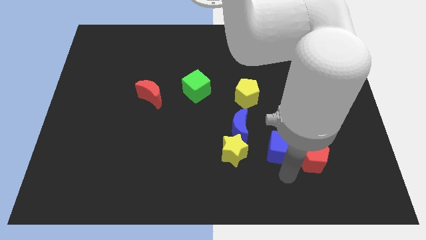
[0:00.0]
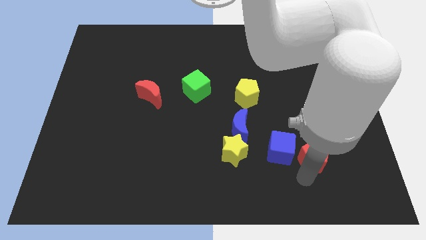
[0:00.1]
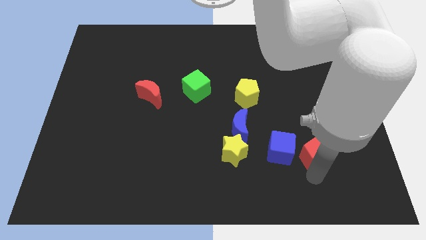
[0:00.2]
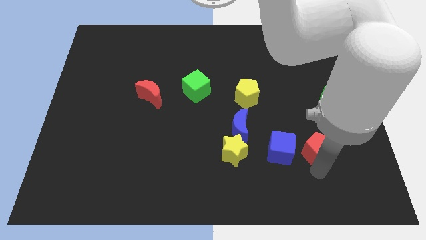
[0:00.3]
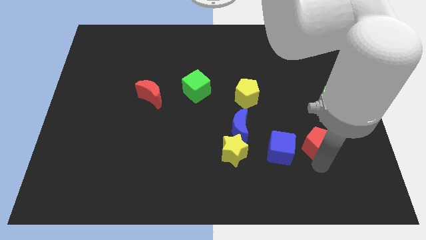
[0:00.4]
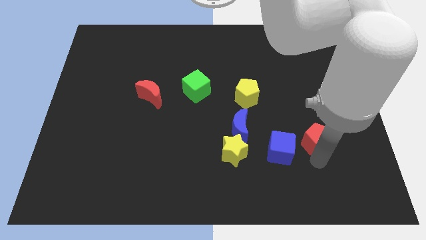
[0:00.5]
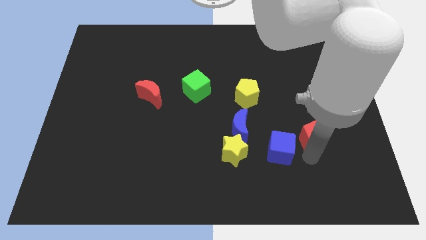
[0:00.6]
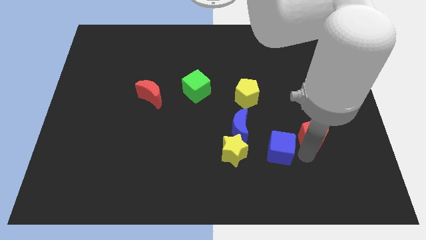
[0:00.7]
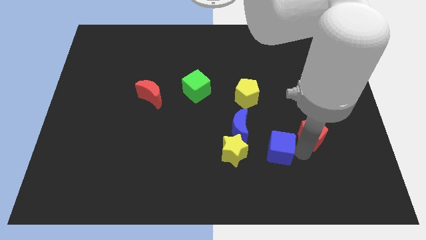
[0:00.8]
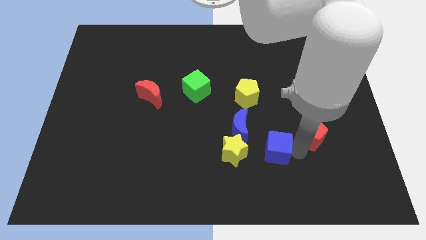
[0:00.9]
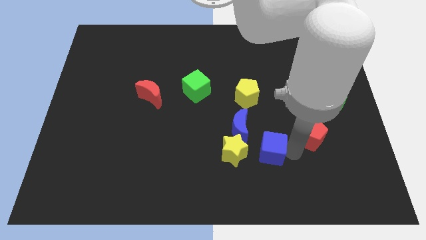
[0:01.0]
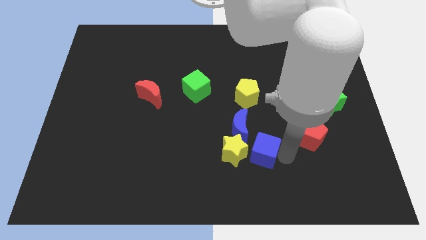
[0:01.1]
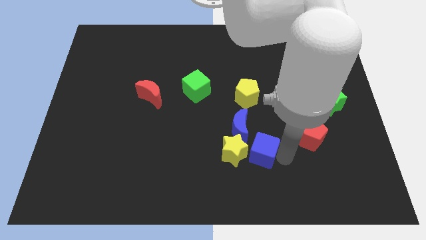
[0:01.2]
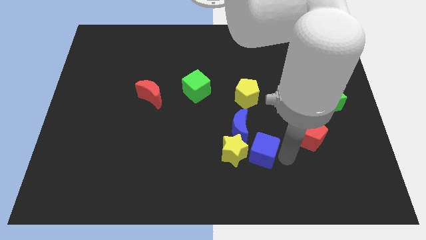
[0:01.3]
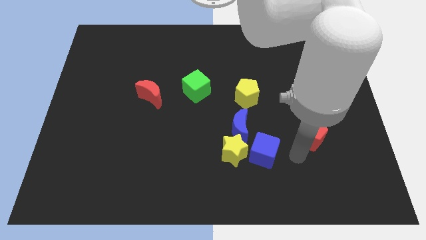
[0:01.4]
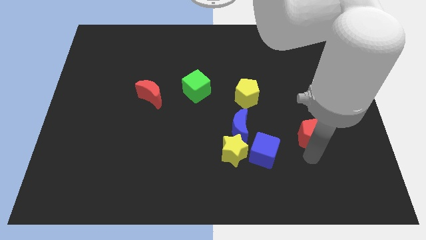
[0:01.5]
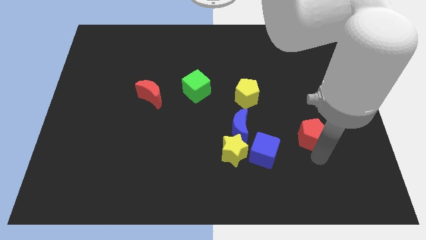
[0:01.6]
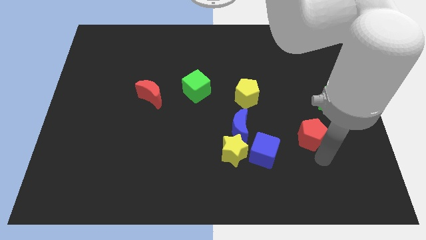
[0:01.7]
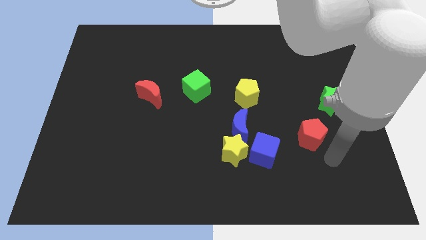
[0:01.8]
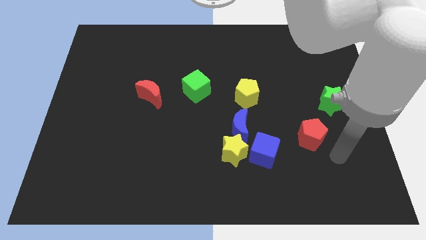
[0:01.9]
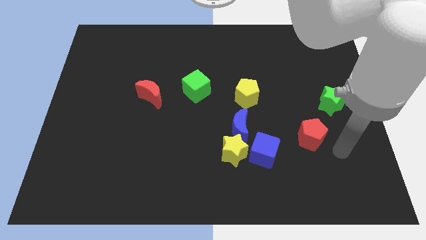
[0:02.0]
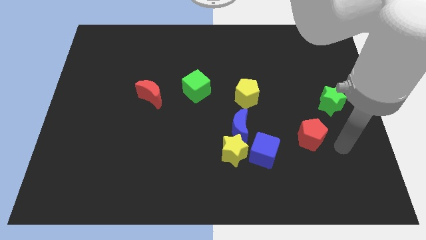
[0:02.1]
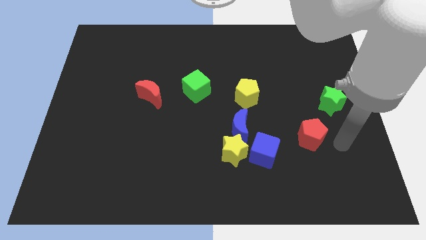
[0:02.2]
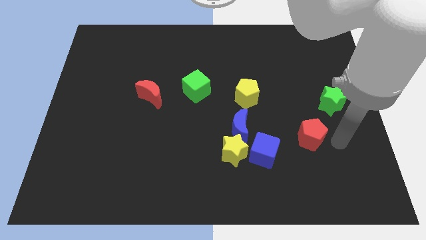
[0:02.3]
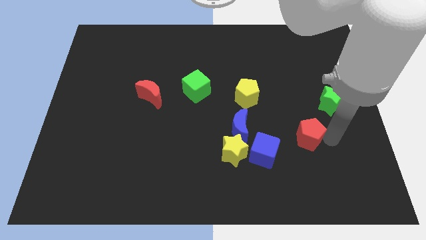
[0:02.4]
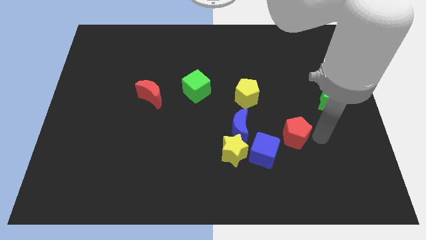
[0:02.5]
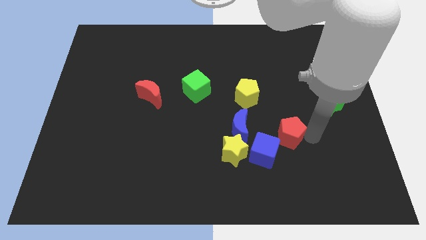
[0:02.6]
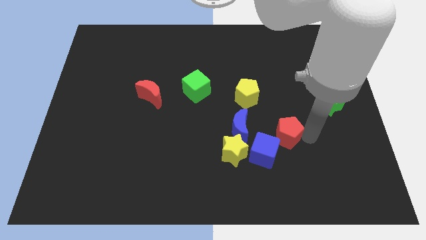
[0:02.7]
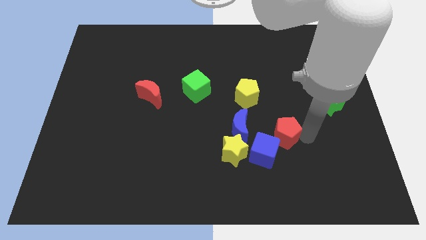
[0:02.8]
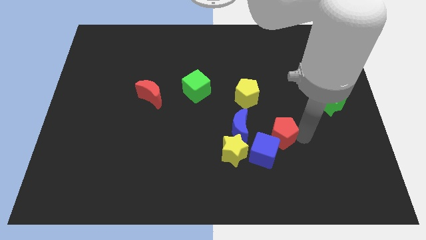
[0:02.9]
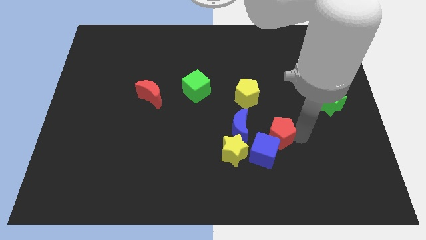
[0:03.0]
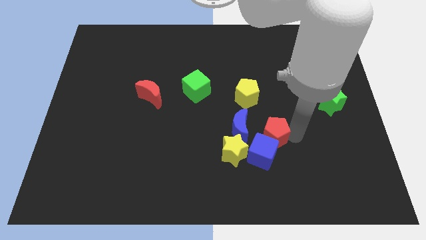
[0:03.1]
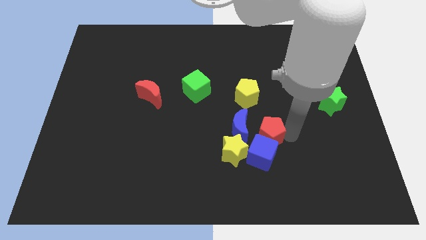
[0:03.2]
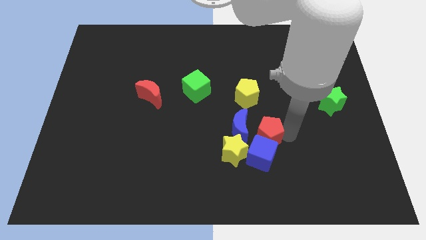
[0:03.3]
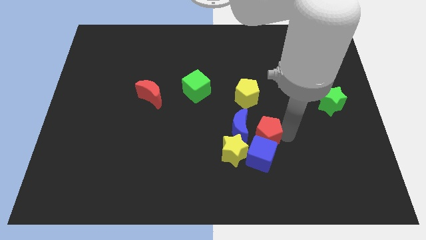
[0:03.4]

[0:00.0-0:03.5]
place red pentagon above blue cube

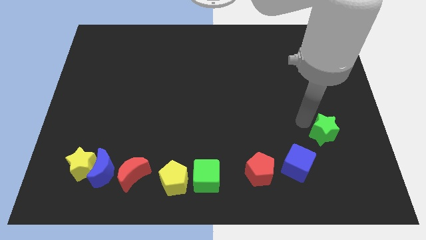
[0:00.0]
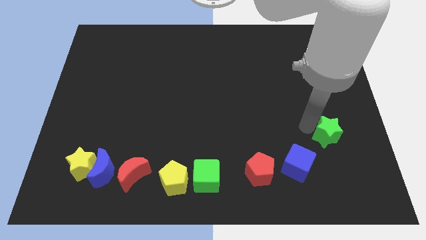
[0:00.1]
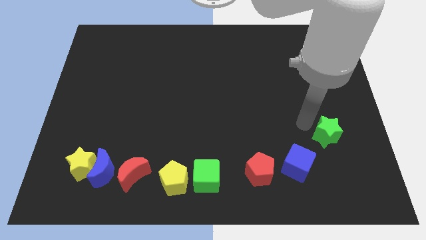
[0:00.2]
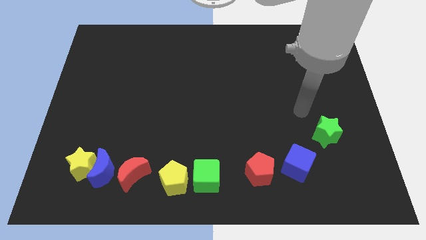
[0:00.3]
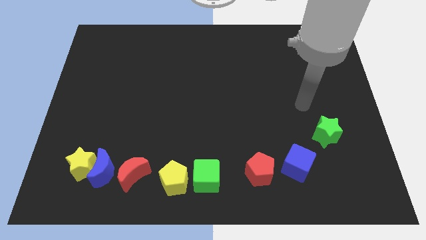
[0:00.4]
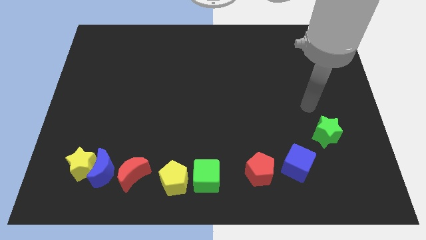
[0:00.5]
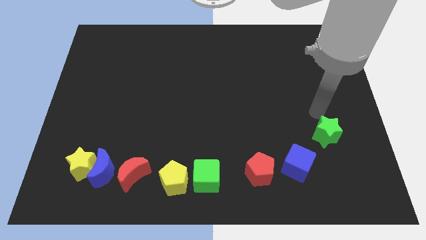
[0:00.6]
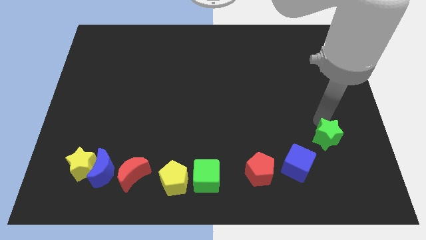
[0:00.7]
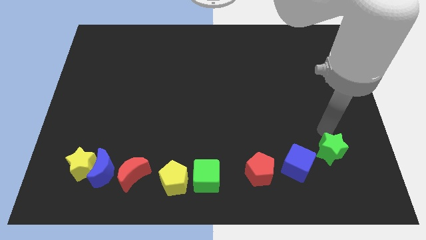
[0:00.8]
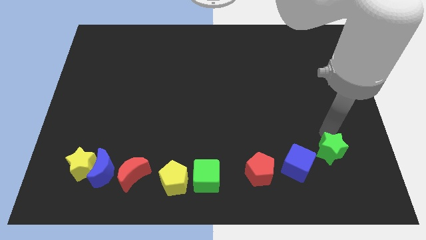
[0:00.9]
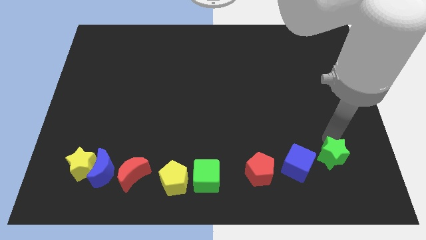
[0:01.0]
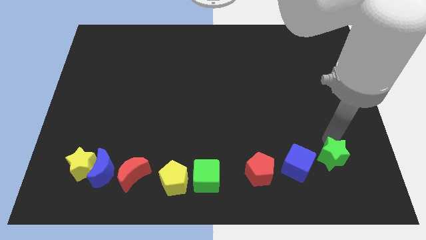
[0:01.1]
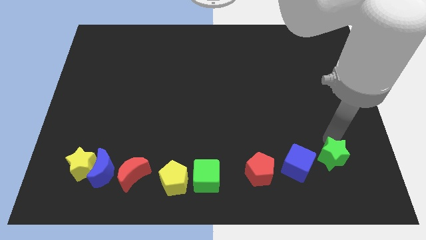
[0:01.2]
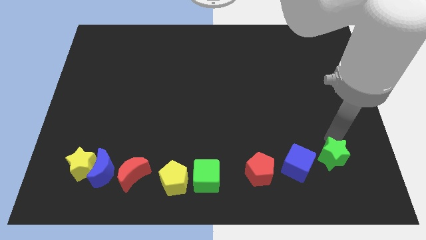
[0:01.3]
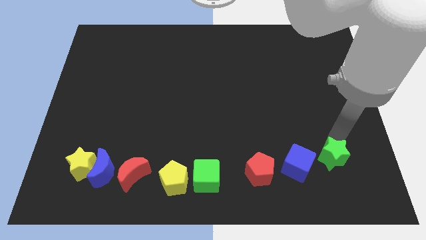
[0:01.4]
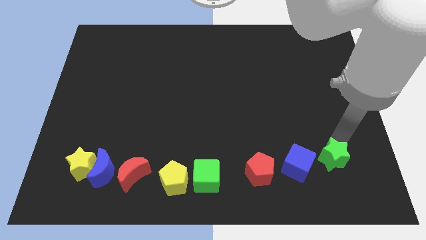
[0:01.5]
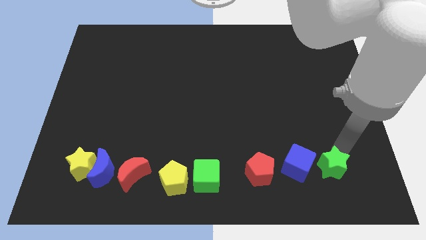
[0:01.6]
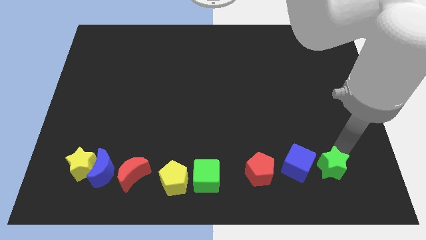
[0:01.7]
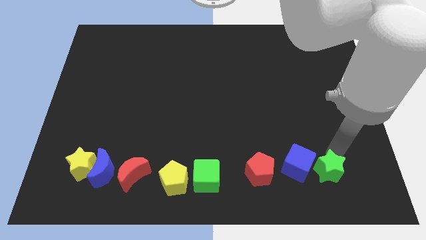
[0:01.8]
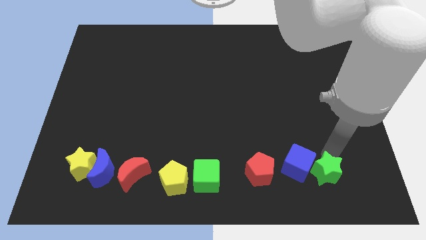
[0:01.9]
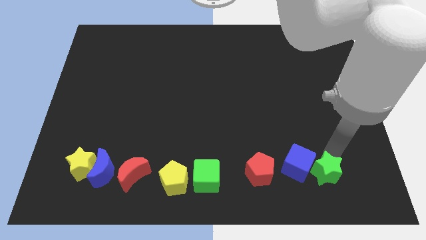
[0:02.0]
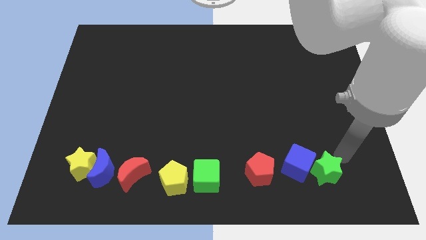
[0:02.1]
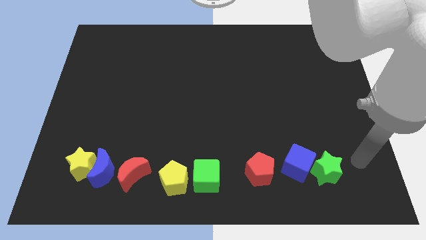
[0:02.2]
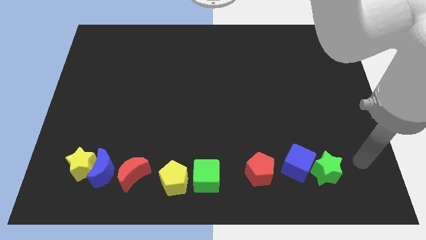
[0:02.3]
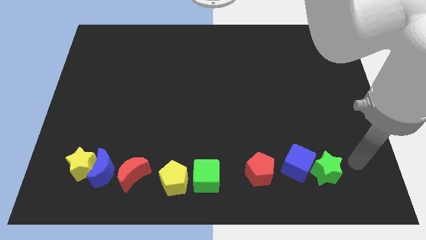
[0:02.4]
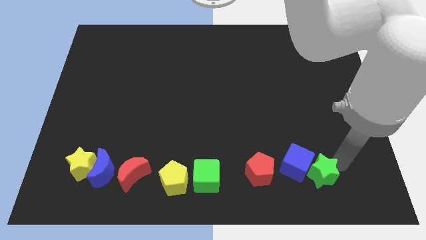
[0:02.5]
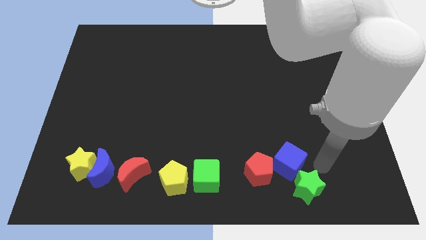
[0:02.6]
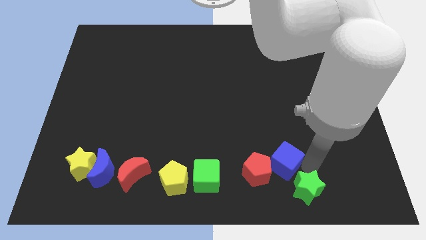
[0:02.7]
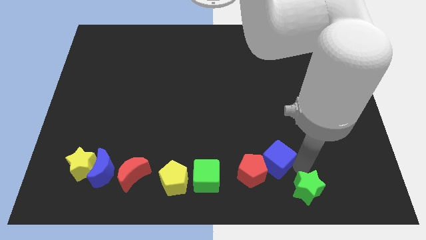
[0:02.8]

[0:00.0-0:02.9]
push the green star into the blue cube

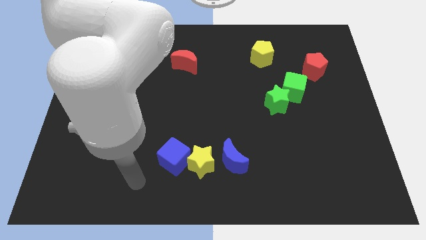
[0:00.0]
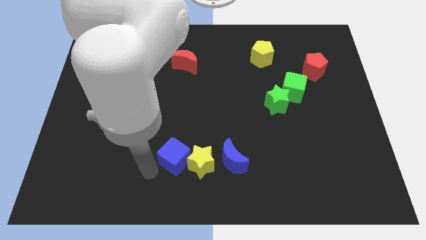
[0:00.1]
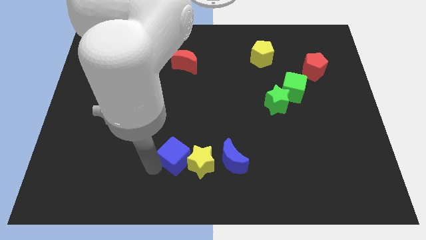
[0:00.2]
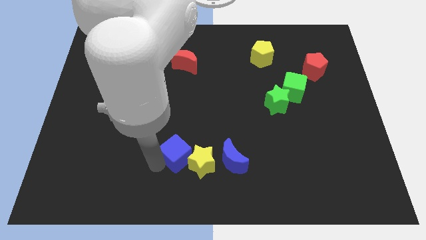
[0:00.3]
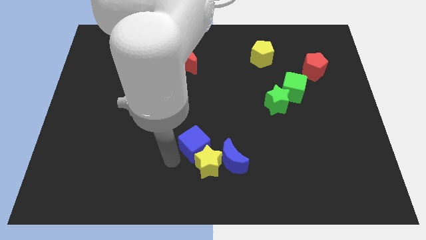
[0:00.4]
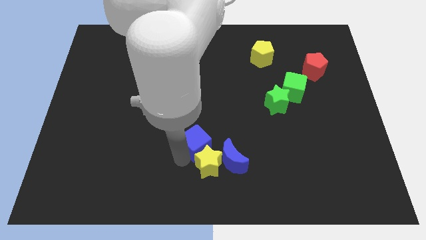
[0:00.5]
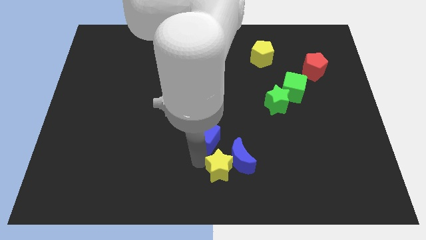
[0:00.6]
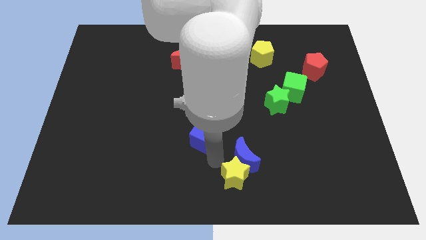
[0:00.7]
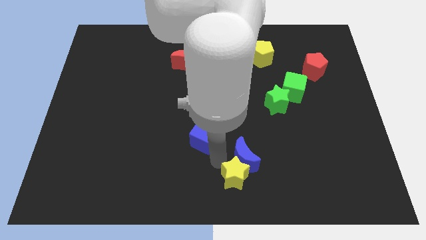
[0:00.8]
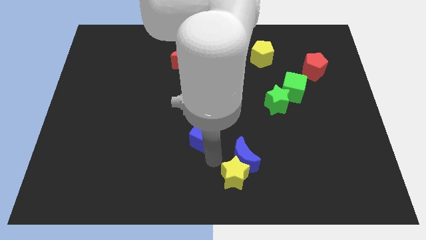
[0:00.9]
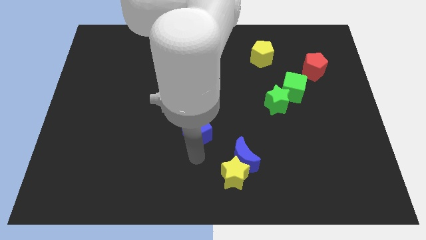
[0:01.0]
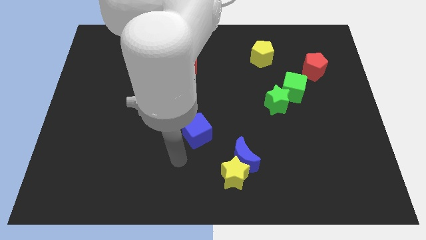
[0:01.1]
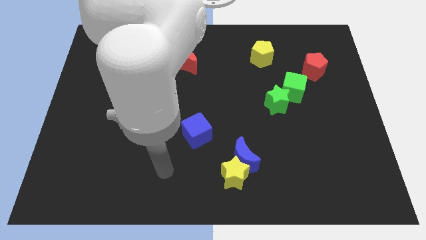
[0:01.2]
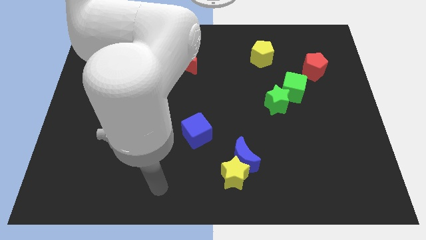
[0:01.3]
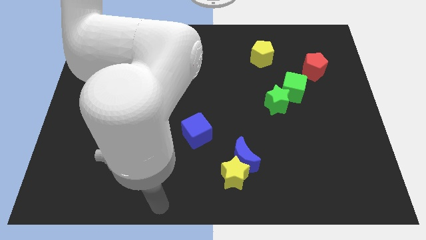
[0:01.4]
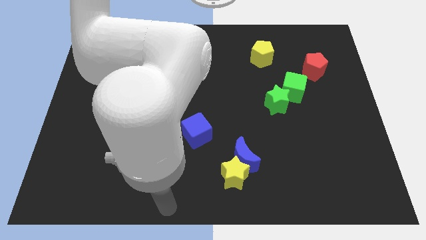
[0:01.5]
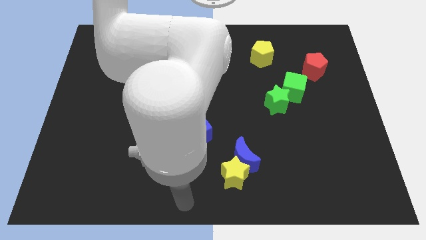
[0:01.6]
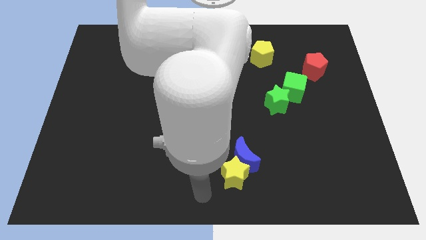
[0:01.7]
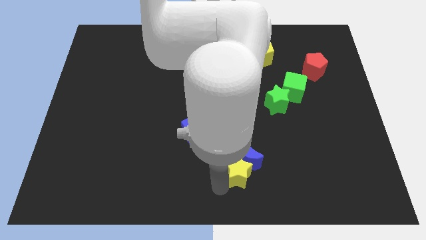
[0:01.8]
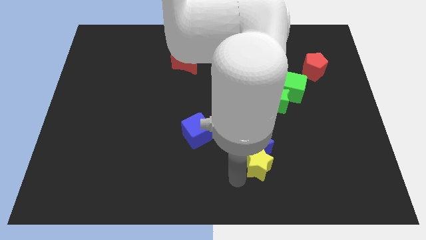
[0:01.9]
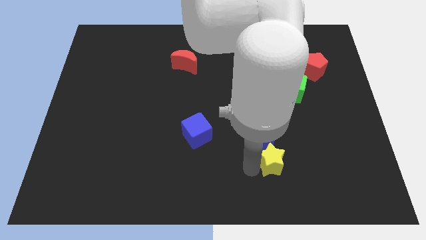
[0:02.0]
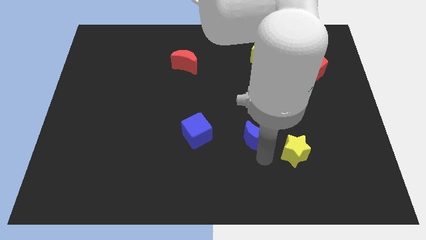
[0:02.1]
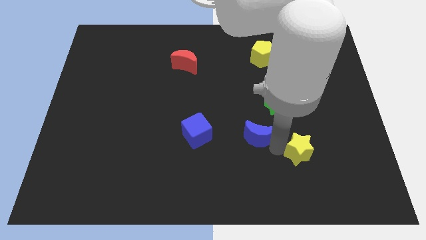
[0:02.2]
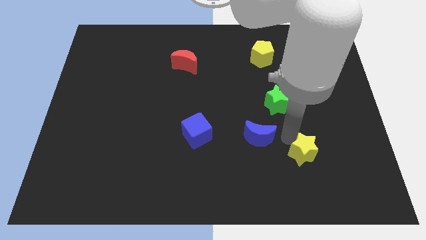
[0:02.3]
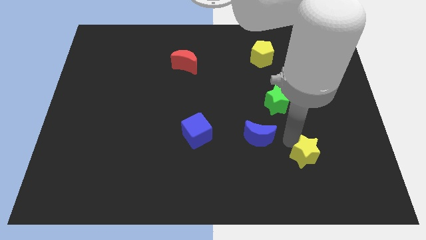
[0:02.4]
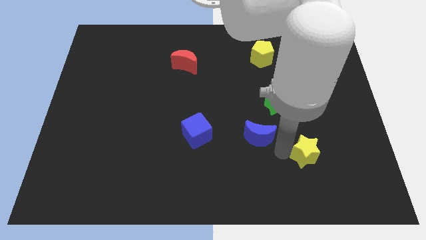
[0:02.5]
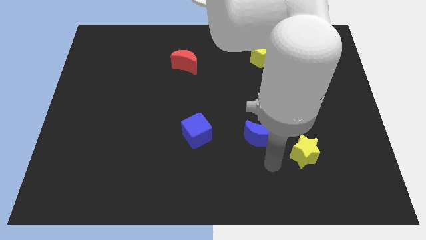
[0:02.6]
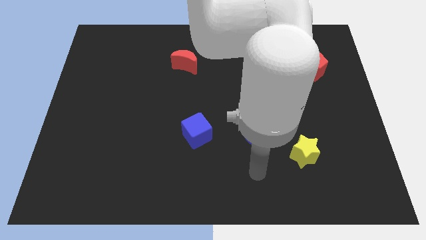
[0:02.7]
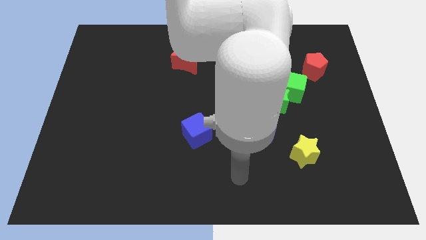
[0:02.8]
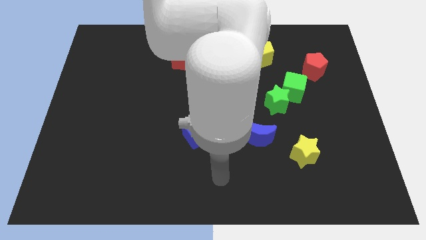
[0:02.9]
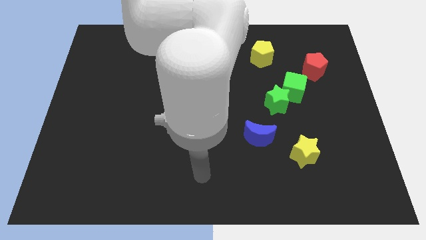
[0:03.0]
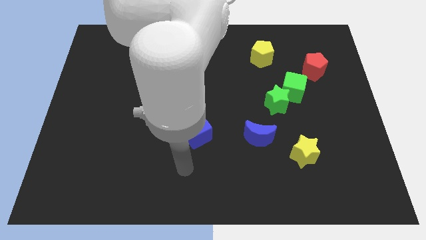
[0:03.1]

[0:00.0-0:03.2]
separate the blue blocks and yellow star in different directions
